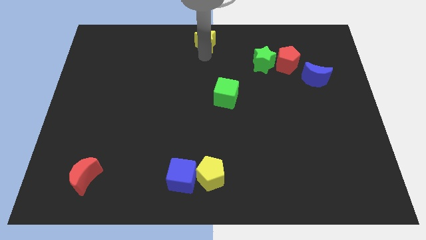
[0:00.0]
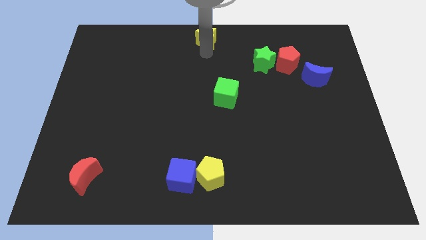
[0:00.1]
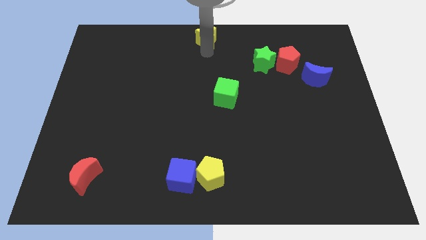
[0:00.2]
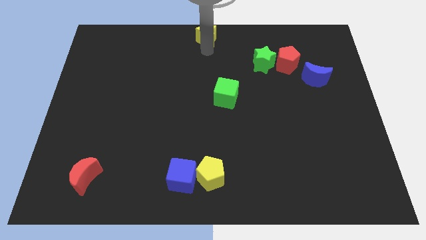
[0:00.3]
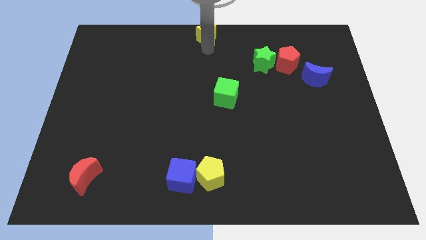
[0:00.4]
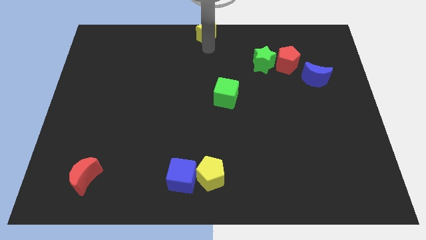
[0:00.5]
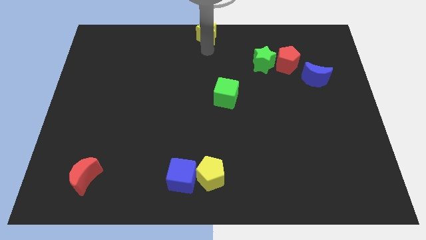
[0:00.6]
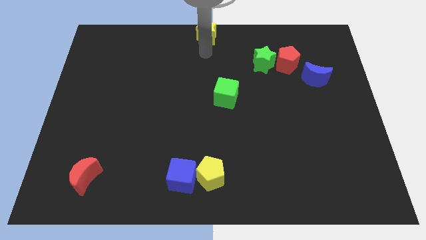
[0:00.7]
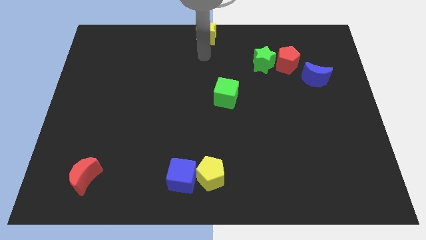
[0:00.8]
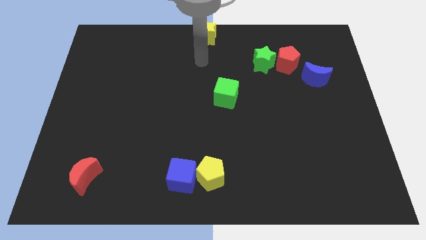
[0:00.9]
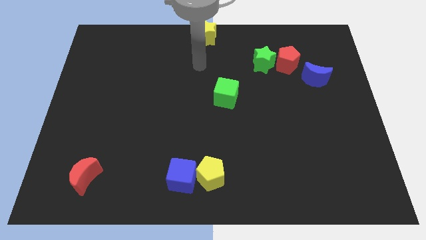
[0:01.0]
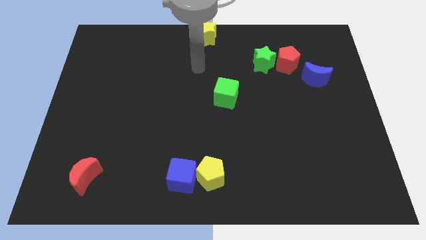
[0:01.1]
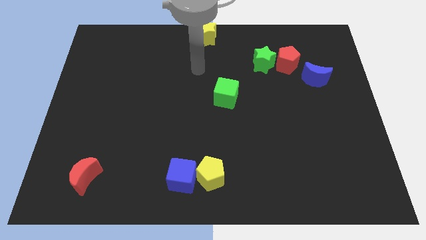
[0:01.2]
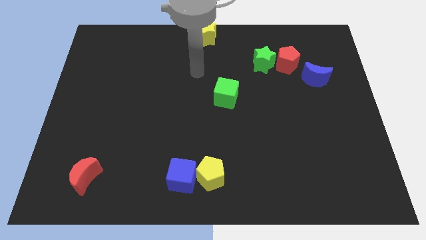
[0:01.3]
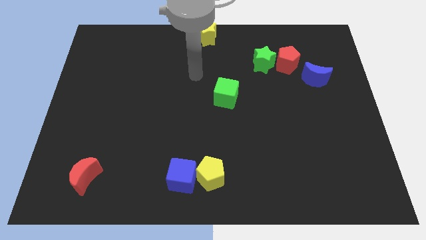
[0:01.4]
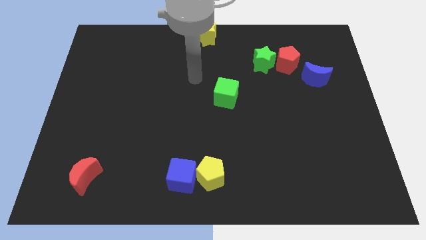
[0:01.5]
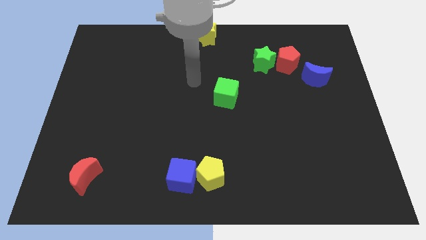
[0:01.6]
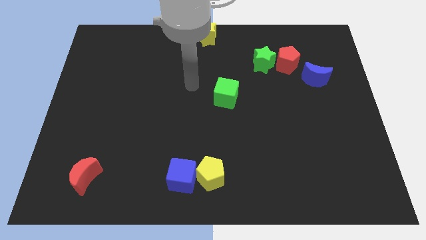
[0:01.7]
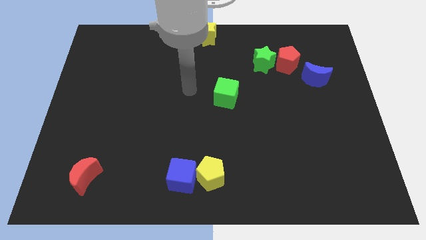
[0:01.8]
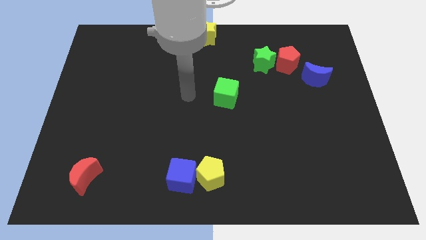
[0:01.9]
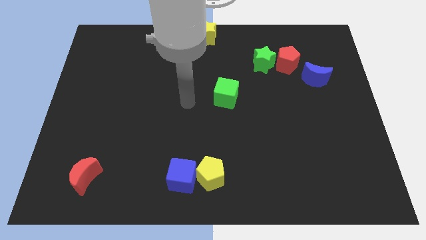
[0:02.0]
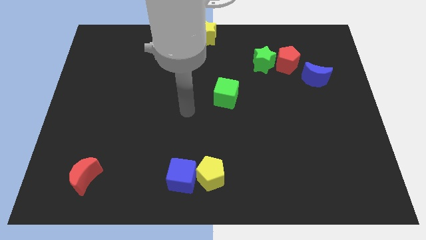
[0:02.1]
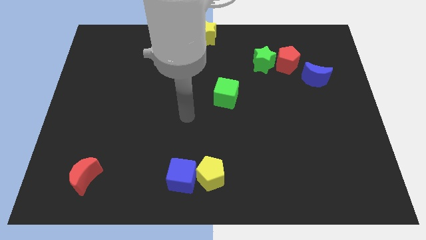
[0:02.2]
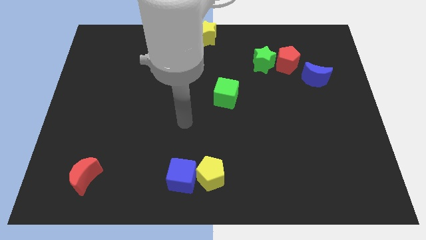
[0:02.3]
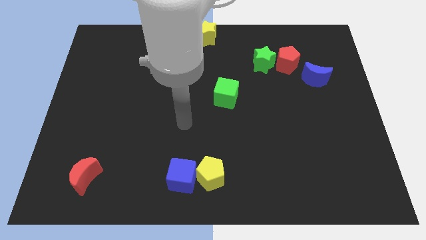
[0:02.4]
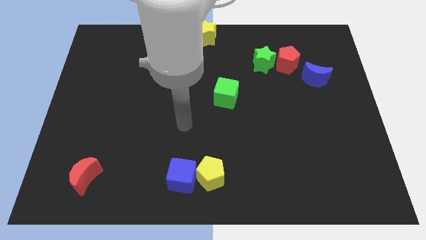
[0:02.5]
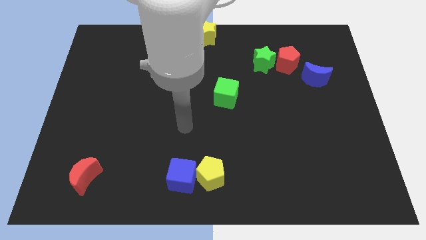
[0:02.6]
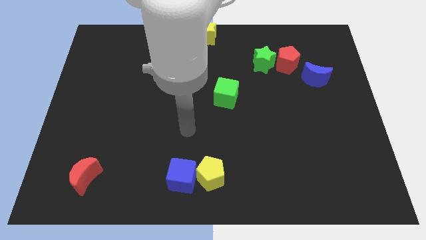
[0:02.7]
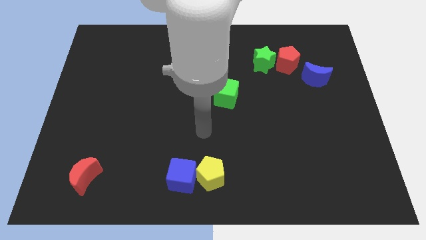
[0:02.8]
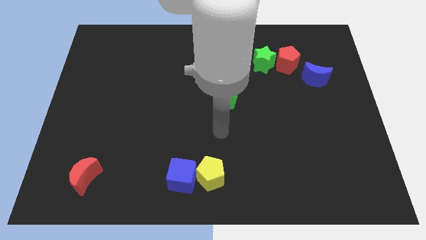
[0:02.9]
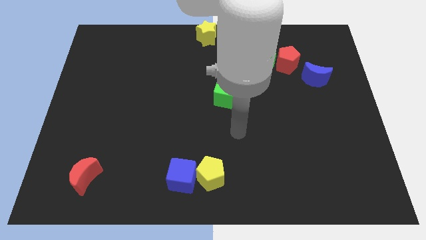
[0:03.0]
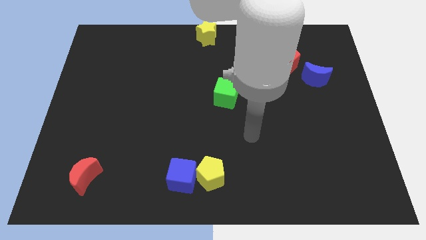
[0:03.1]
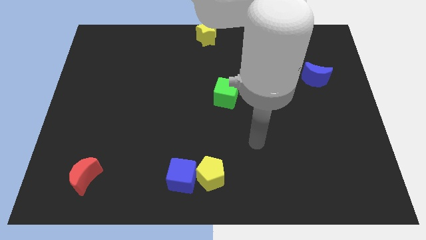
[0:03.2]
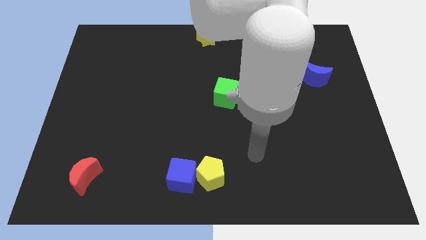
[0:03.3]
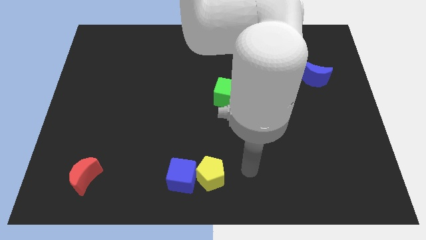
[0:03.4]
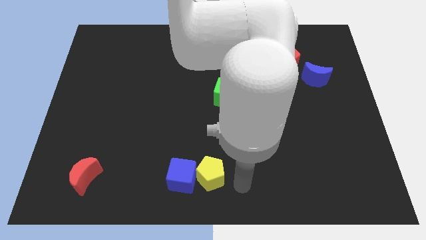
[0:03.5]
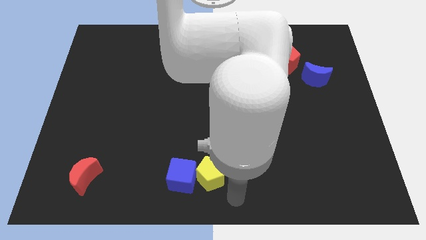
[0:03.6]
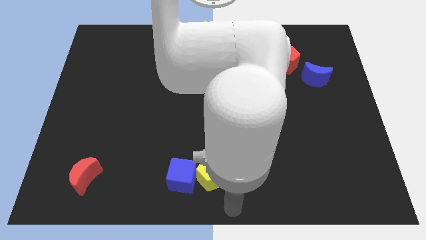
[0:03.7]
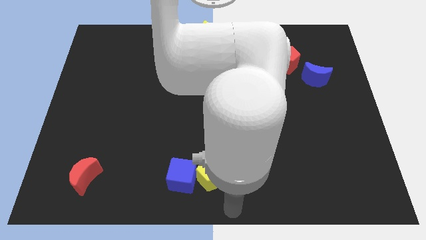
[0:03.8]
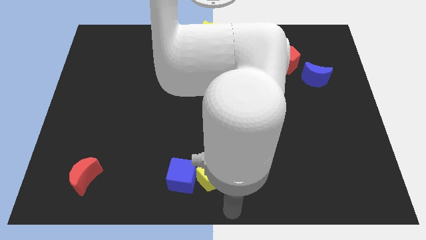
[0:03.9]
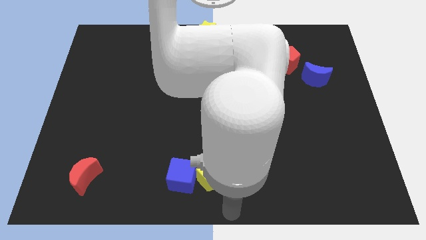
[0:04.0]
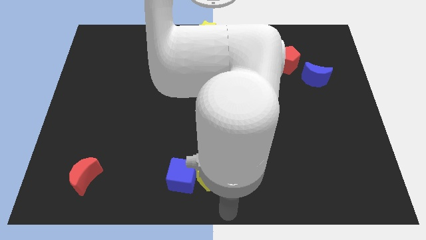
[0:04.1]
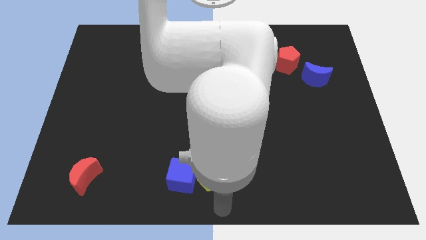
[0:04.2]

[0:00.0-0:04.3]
move the arm to the bottom side of the yellow pentagon

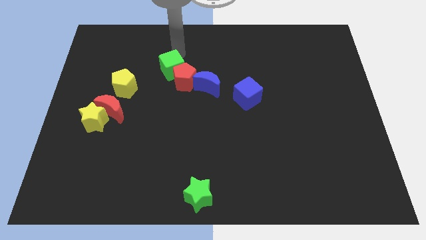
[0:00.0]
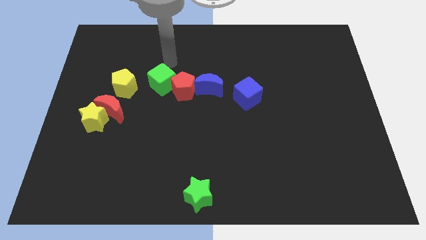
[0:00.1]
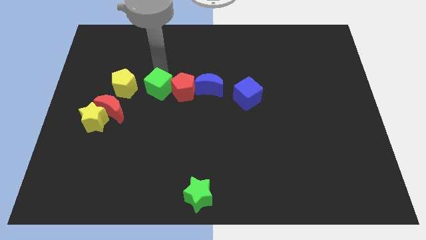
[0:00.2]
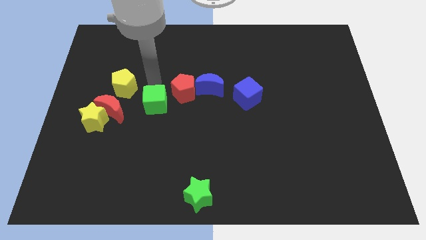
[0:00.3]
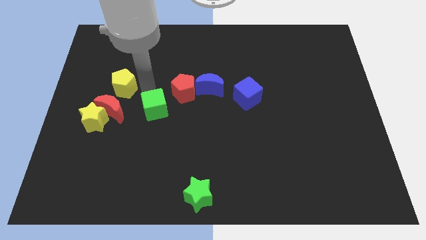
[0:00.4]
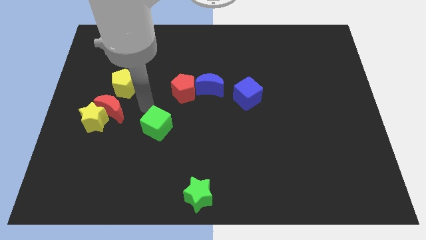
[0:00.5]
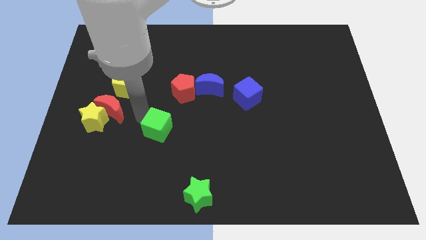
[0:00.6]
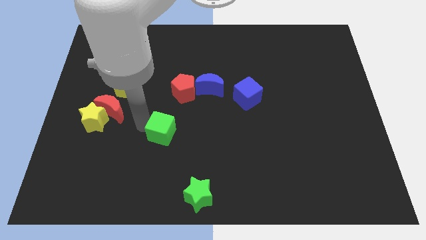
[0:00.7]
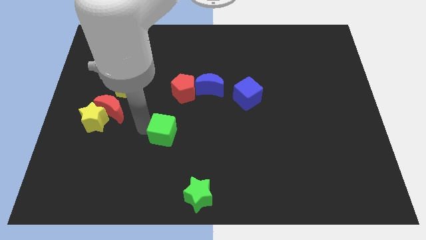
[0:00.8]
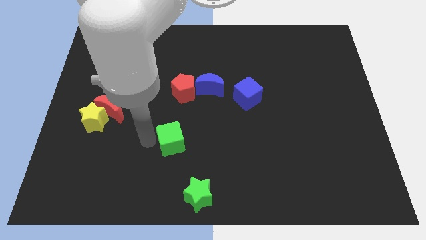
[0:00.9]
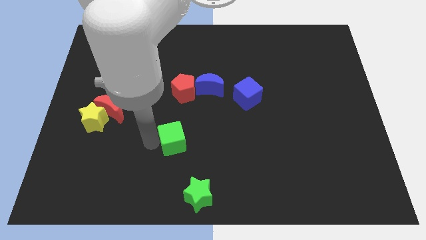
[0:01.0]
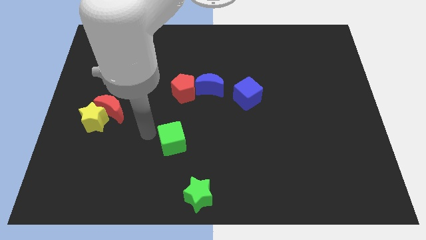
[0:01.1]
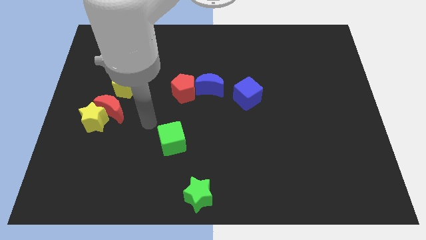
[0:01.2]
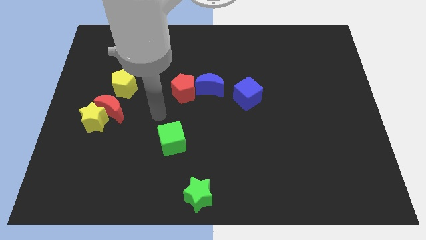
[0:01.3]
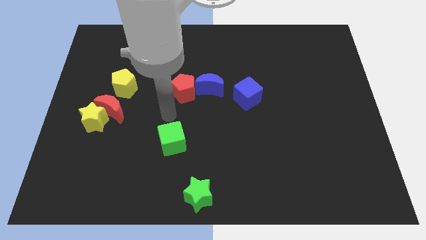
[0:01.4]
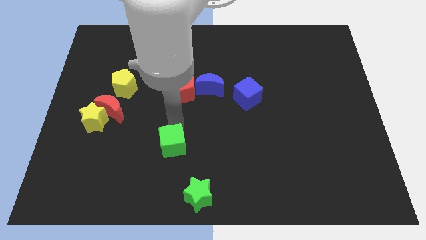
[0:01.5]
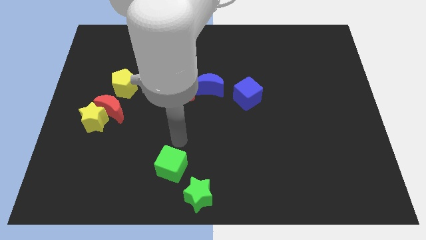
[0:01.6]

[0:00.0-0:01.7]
move the green cube towards the green star

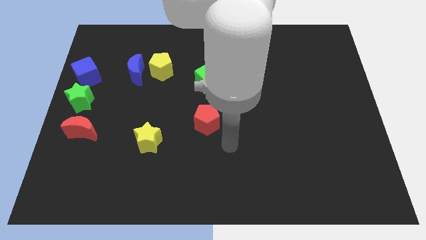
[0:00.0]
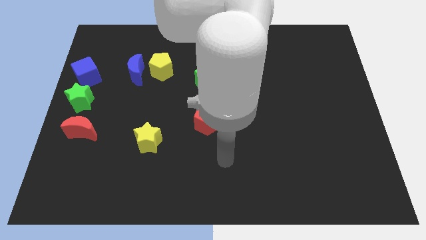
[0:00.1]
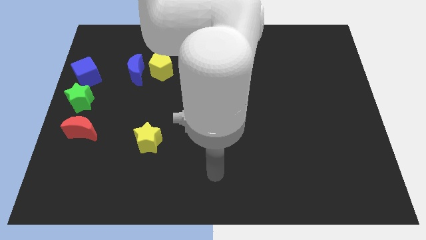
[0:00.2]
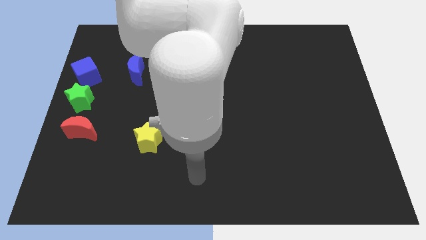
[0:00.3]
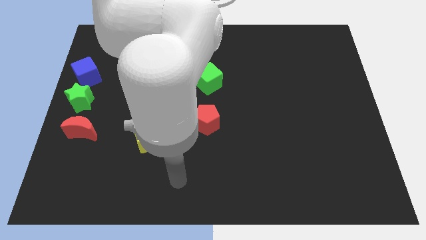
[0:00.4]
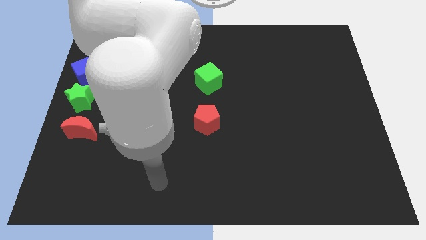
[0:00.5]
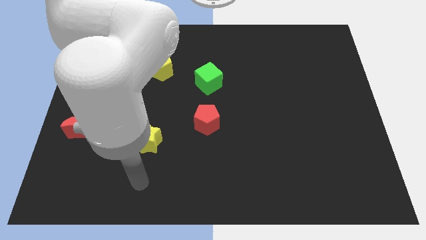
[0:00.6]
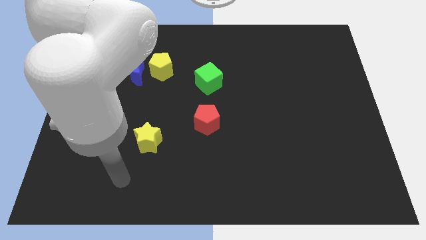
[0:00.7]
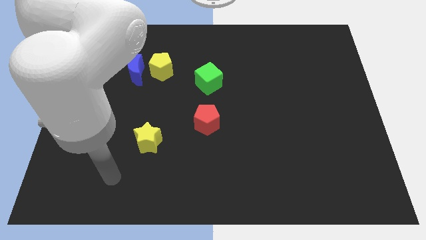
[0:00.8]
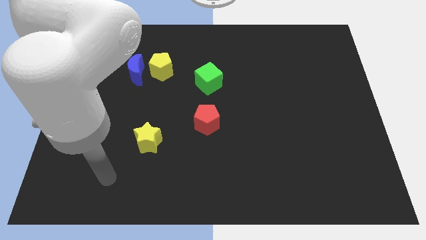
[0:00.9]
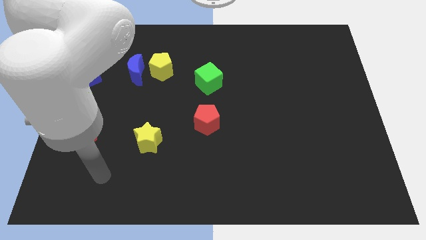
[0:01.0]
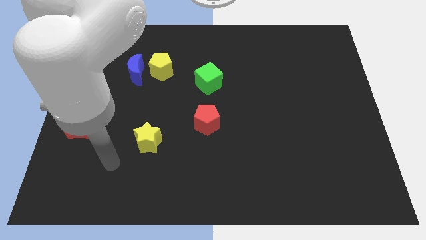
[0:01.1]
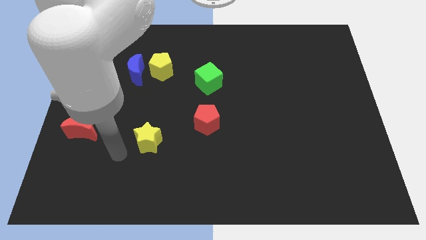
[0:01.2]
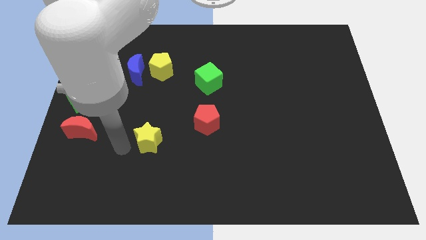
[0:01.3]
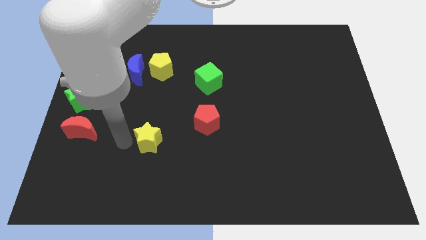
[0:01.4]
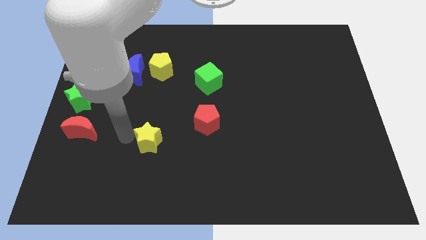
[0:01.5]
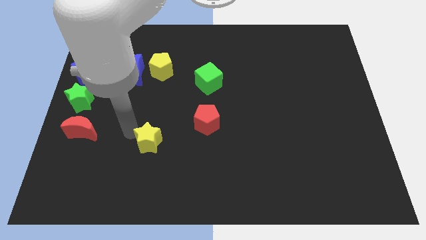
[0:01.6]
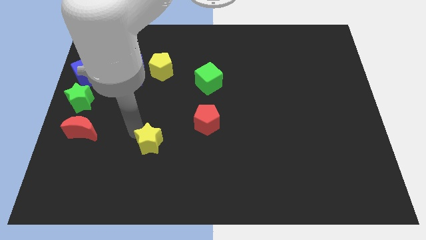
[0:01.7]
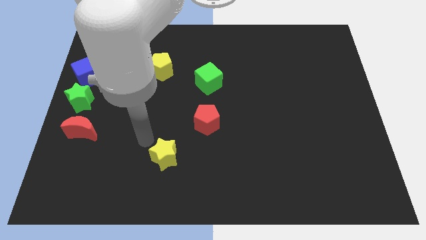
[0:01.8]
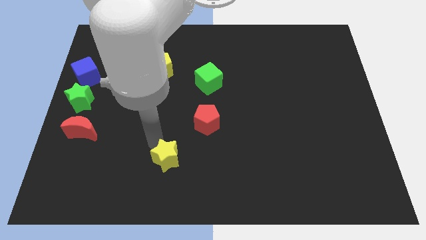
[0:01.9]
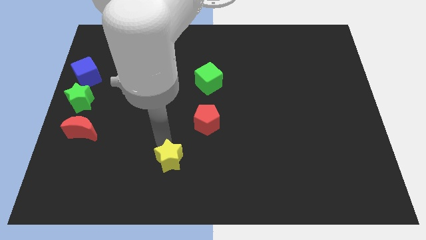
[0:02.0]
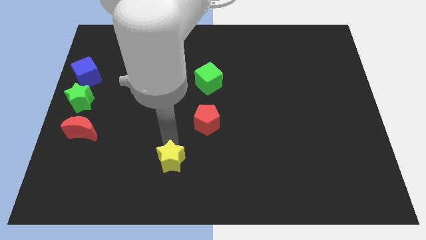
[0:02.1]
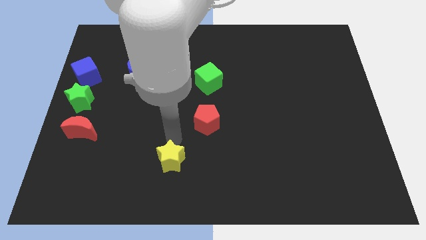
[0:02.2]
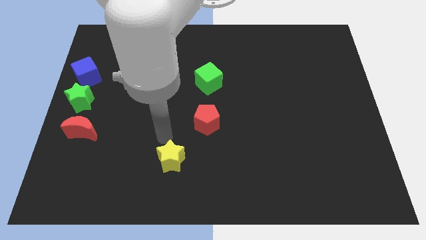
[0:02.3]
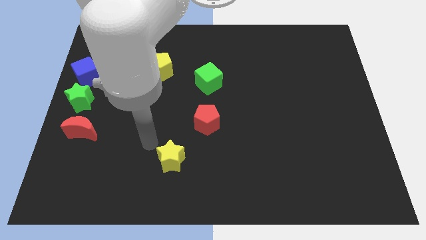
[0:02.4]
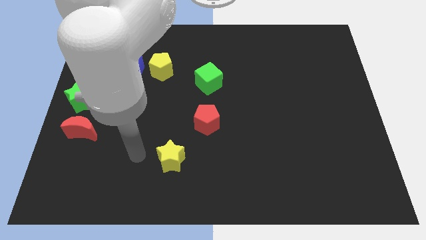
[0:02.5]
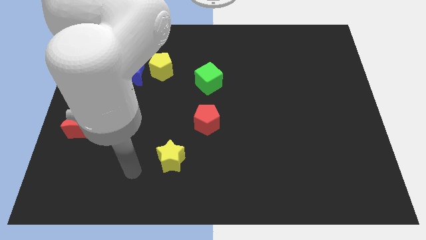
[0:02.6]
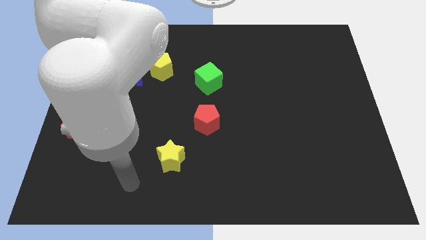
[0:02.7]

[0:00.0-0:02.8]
slightly push the yellow star towards the right side
